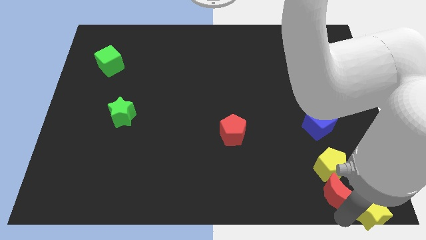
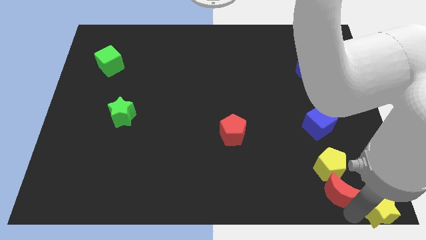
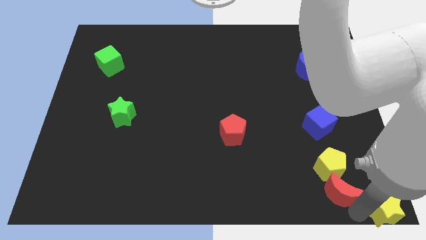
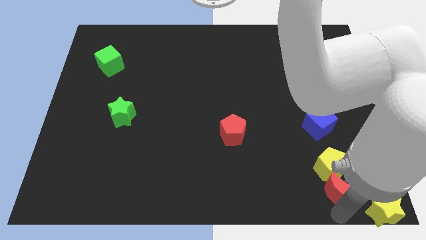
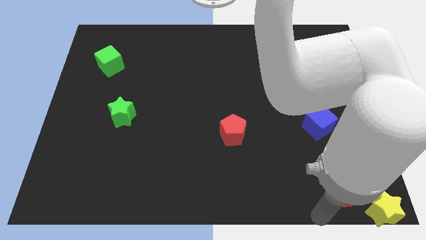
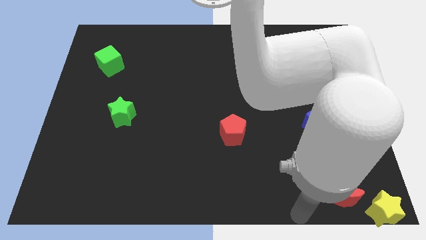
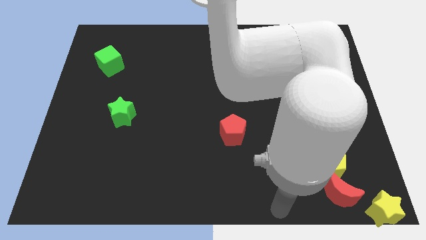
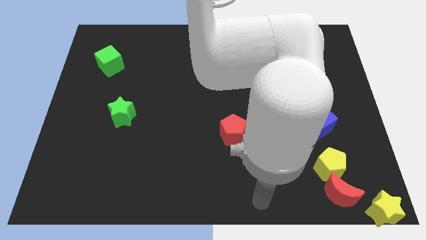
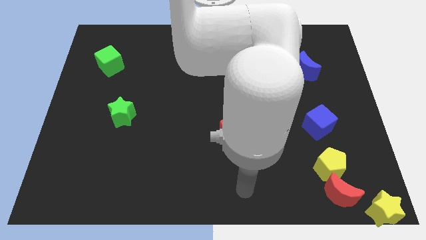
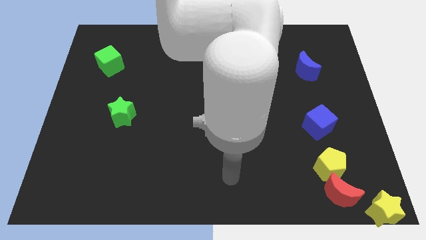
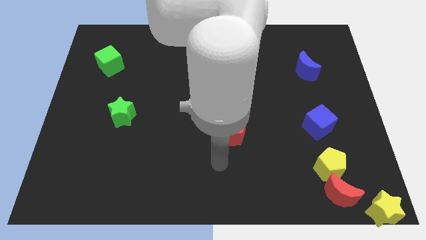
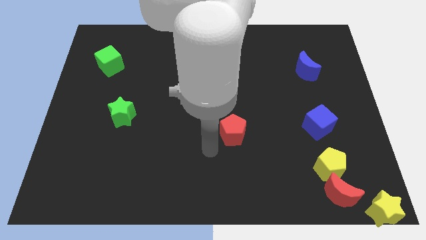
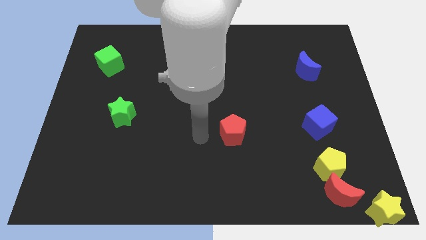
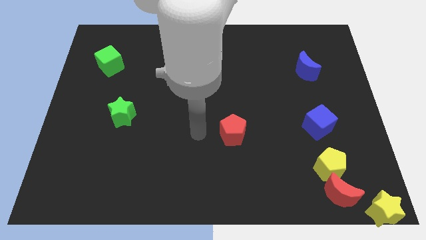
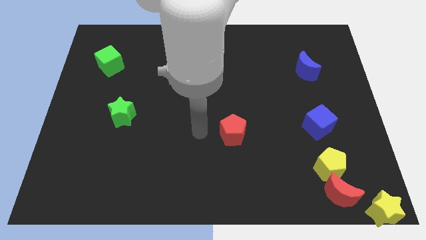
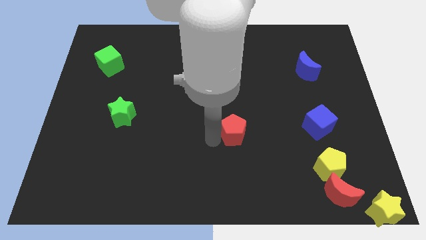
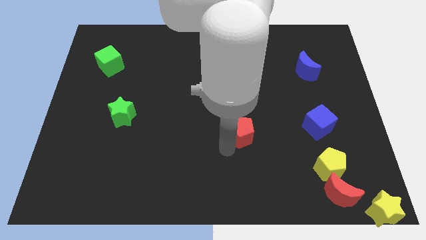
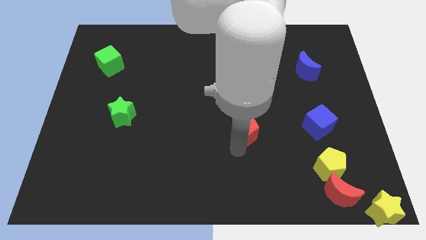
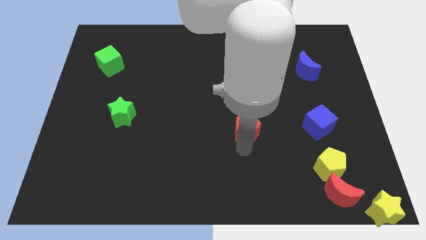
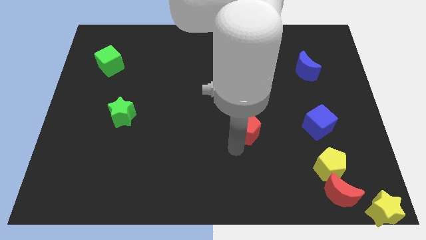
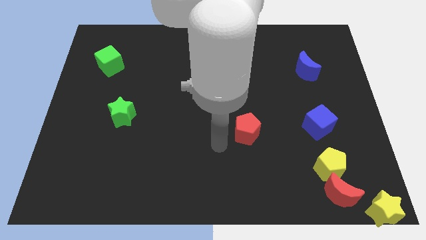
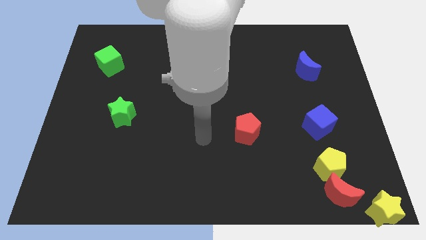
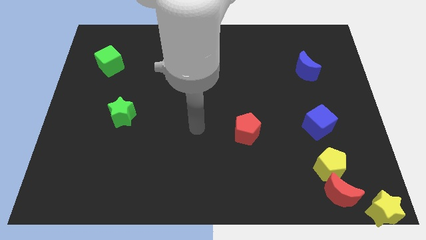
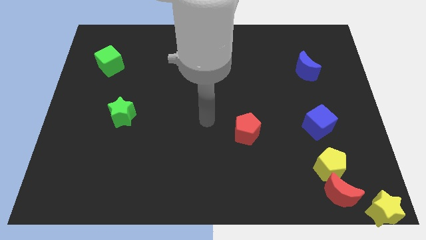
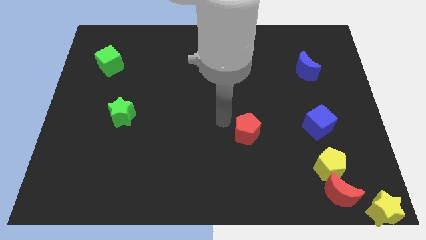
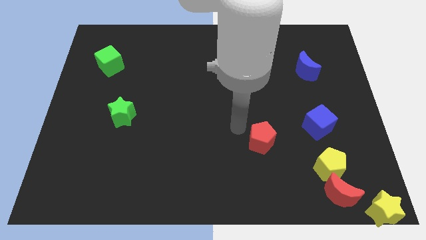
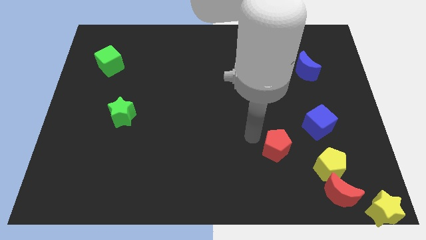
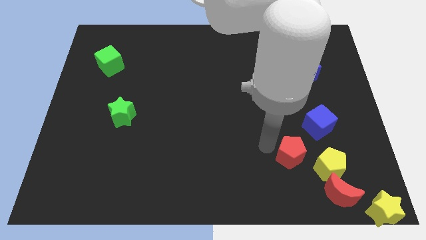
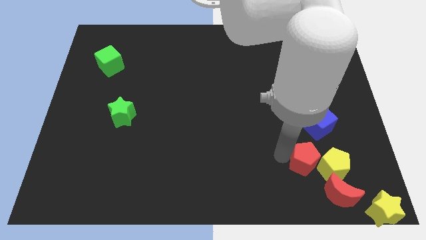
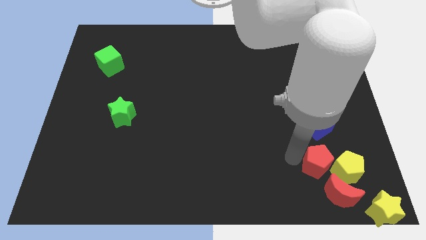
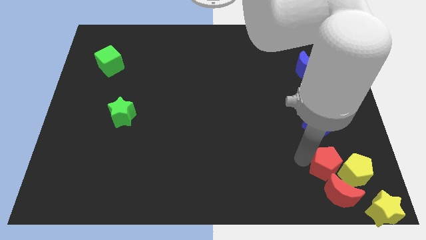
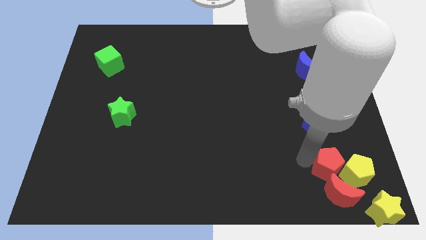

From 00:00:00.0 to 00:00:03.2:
place the red pentagon to the bottom of the blue cube

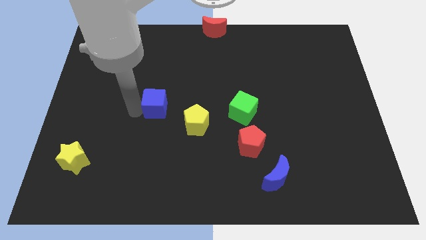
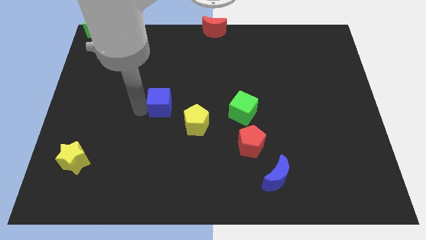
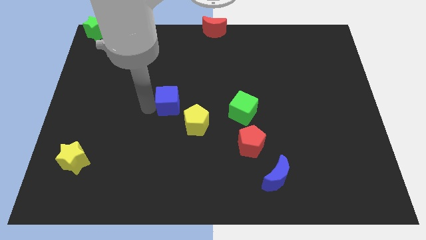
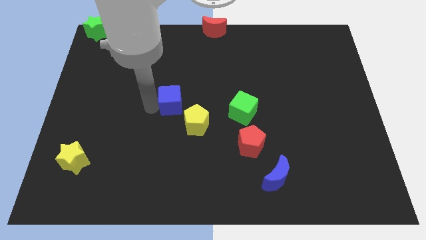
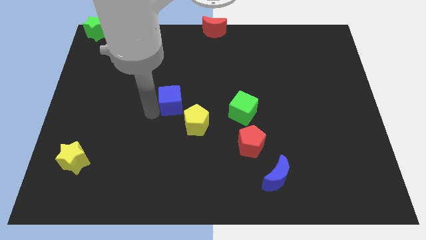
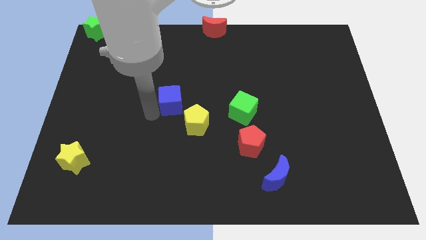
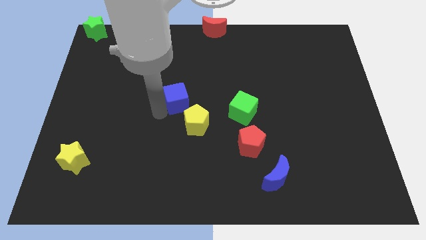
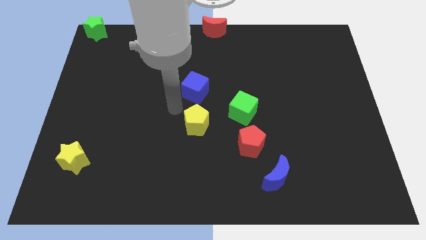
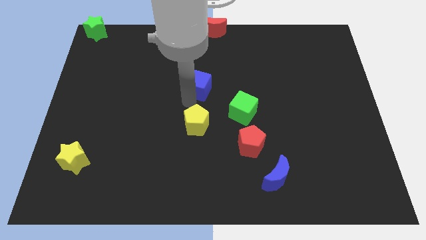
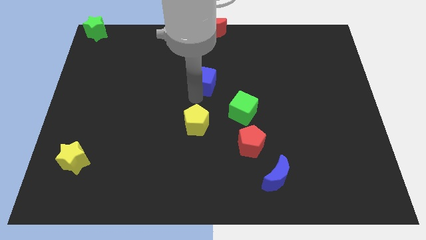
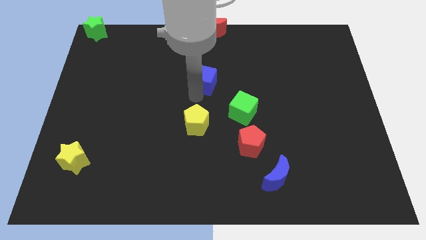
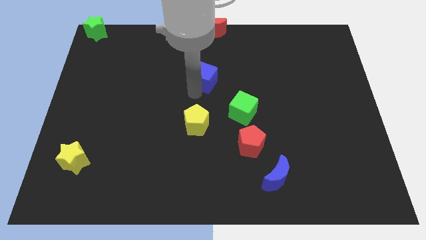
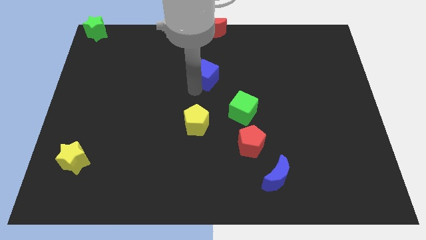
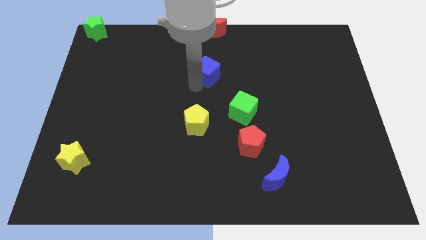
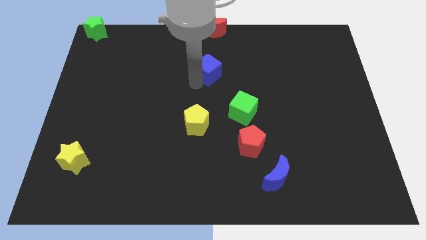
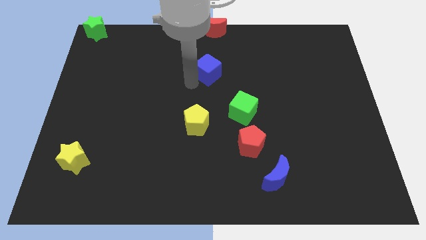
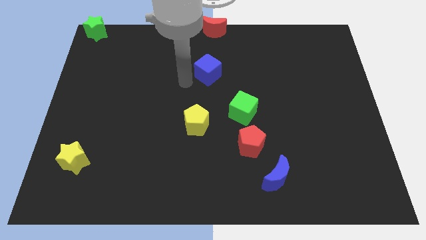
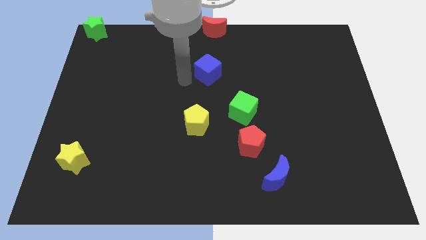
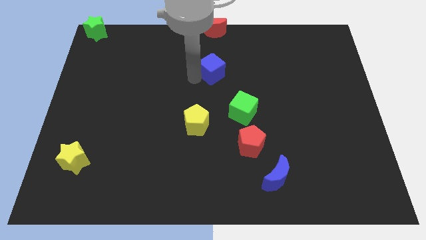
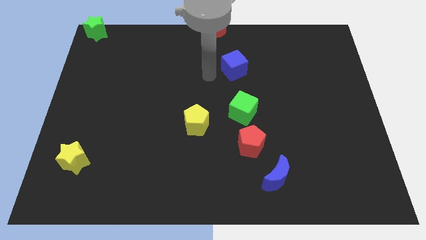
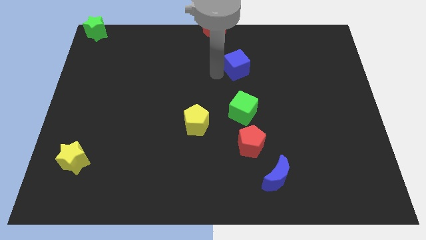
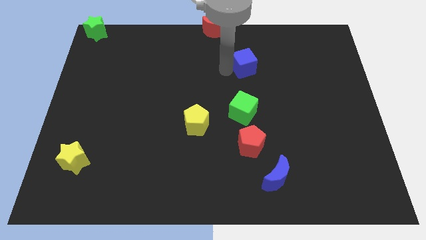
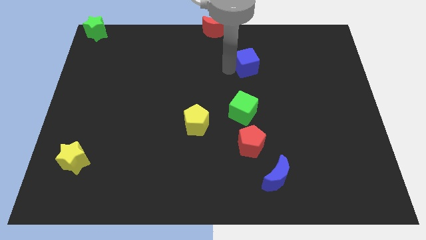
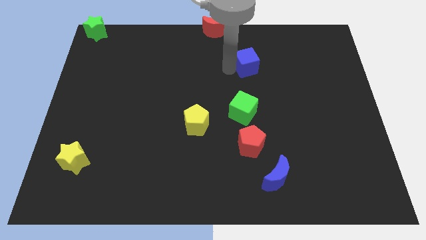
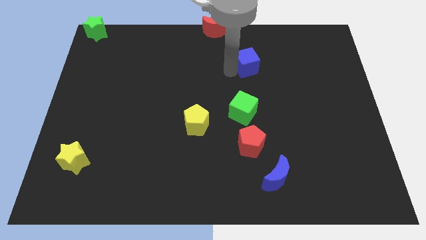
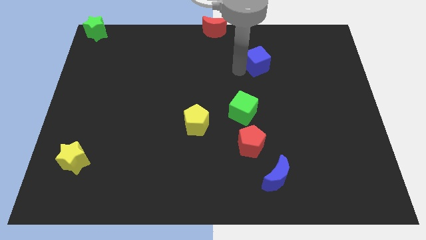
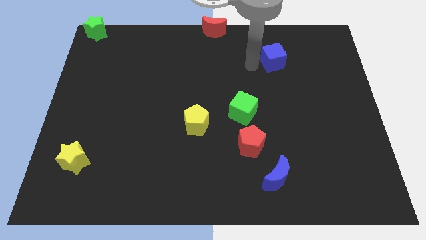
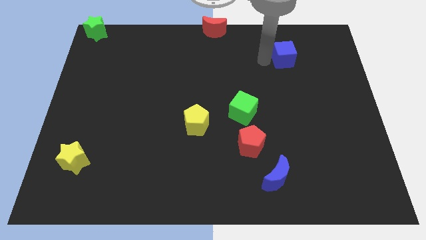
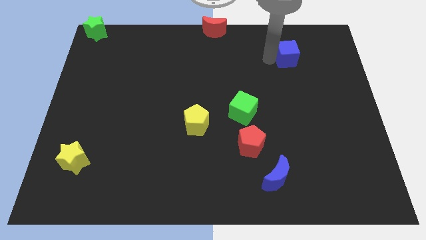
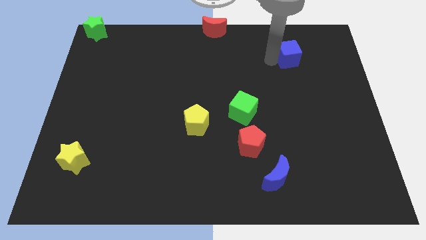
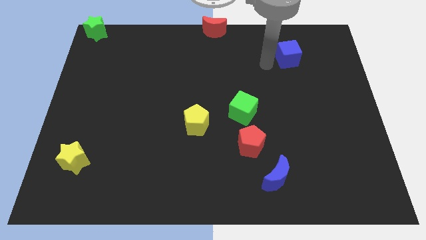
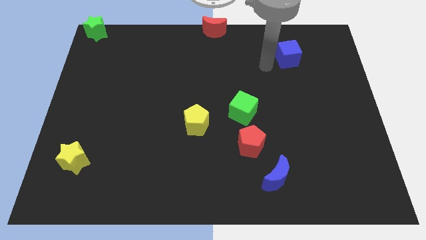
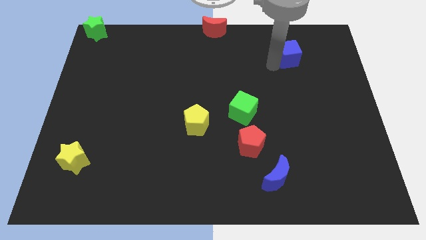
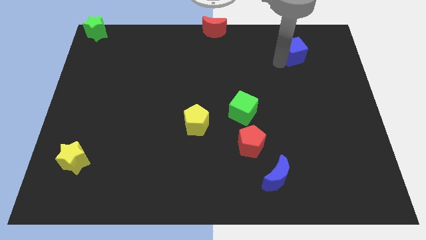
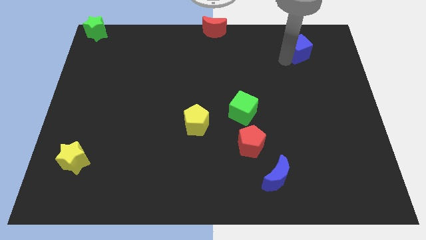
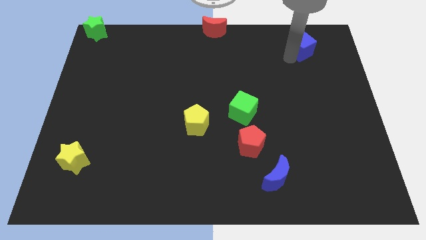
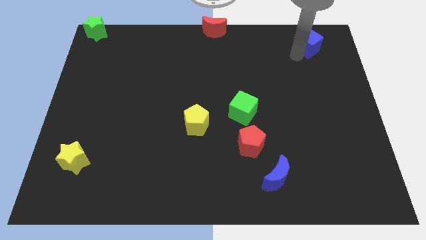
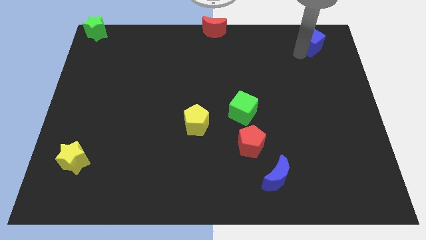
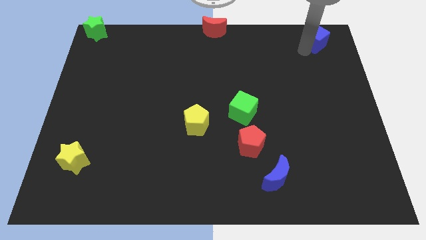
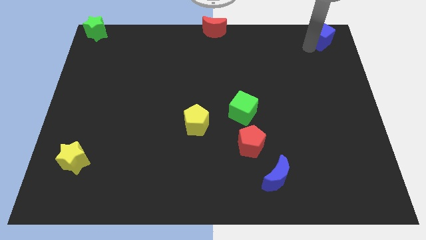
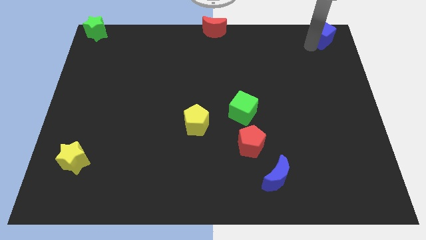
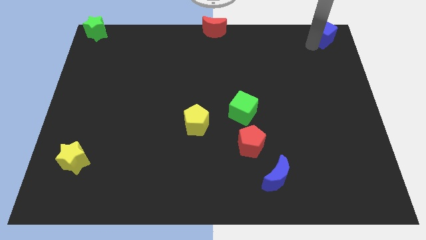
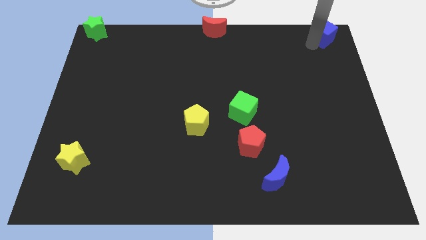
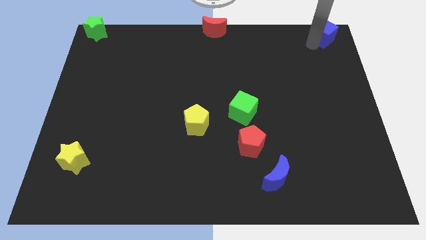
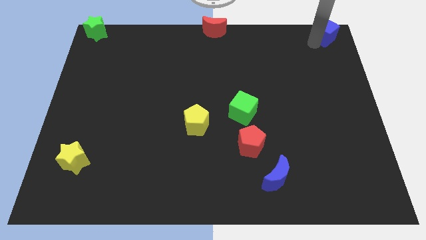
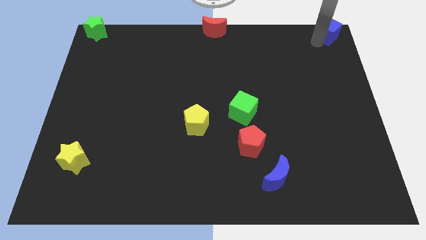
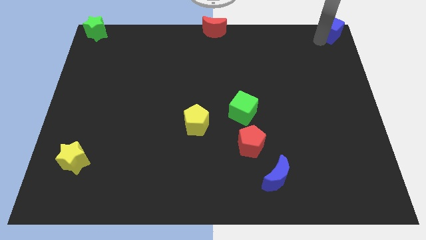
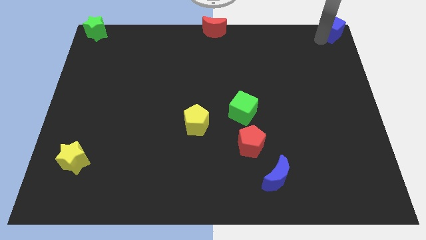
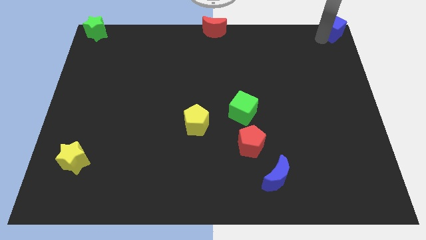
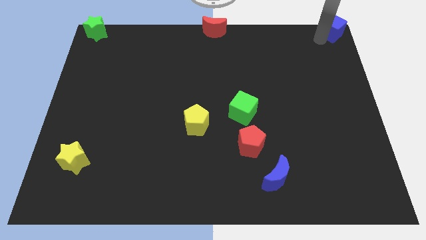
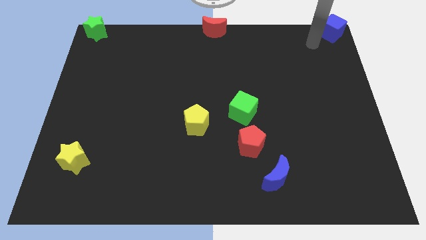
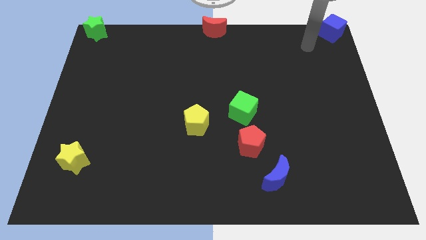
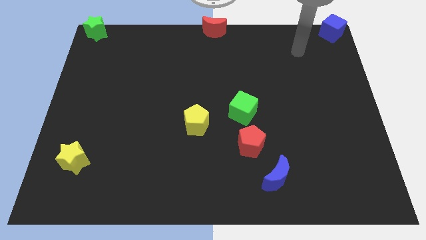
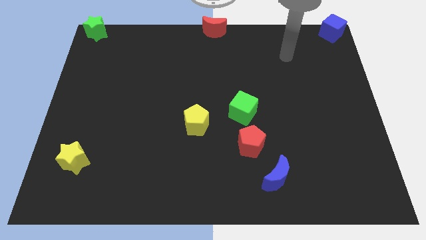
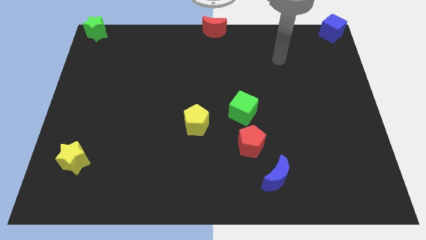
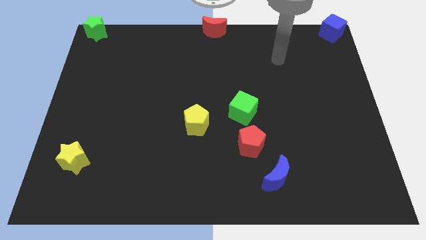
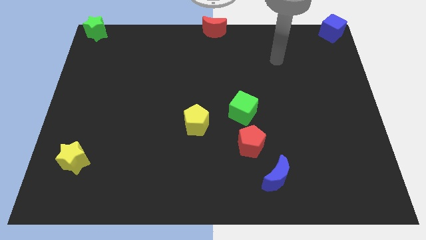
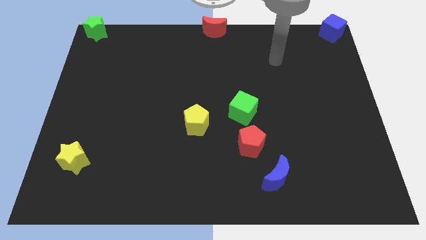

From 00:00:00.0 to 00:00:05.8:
move the blue cube to the top right of the board
